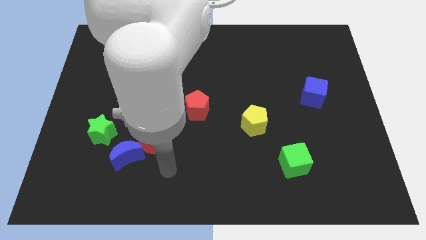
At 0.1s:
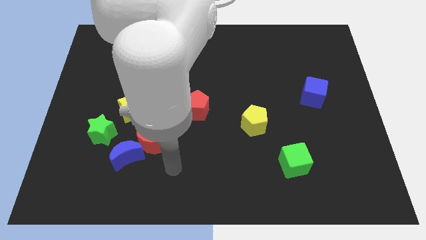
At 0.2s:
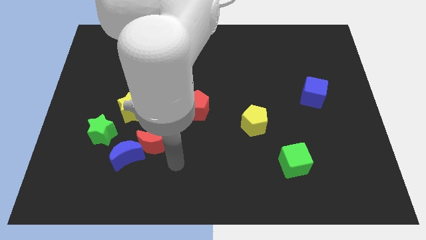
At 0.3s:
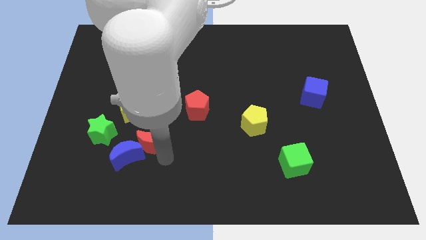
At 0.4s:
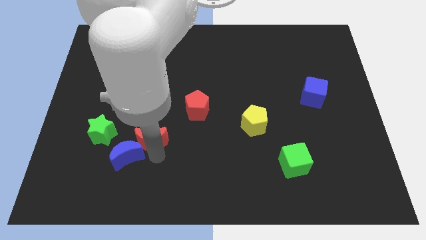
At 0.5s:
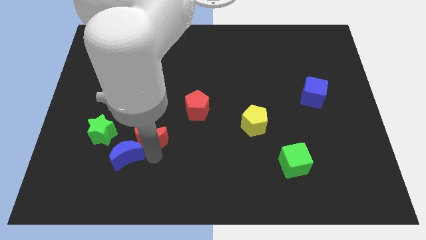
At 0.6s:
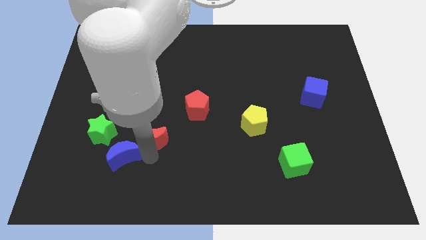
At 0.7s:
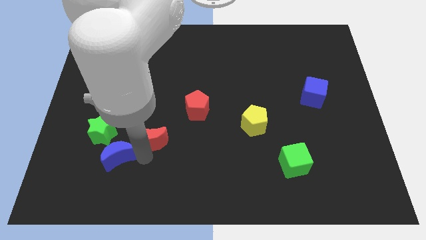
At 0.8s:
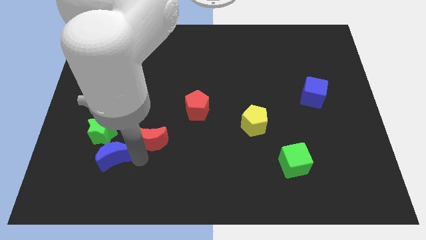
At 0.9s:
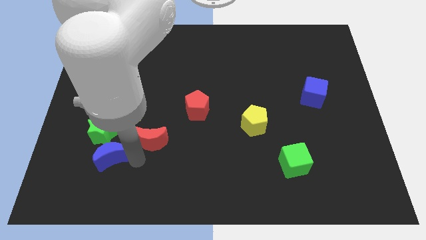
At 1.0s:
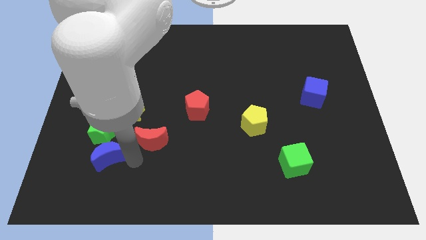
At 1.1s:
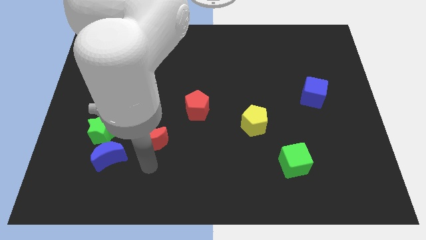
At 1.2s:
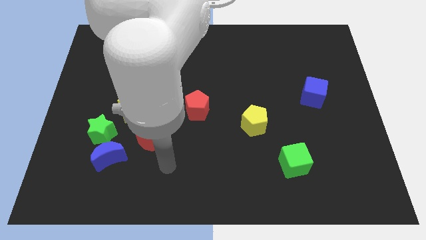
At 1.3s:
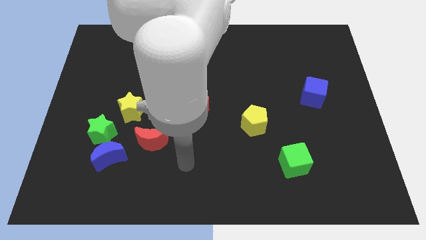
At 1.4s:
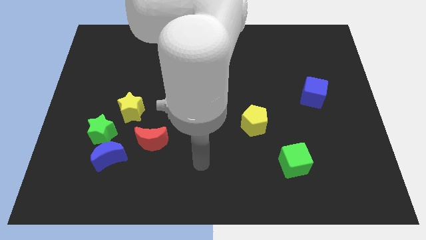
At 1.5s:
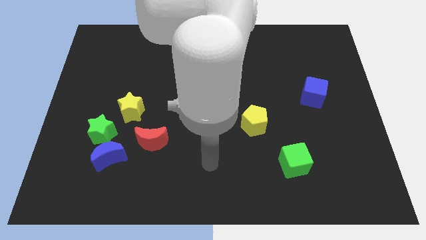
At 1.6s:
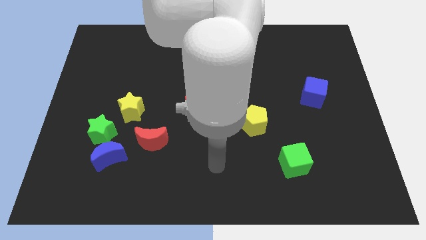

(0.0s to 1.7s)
place the blue moon below the green star

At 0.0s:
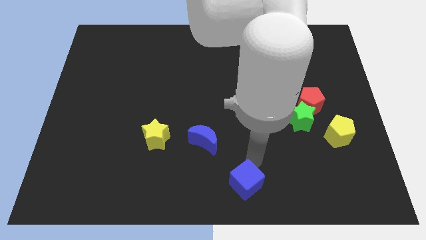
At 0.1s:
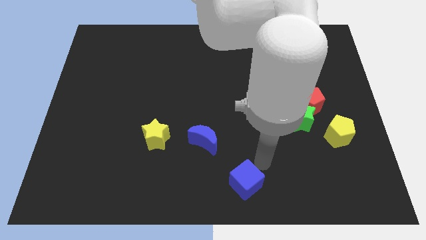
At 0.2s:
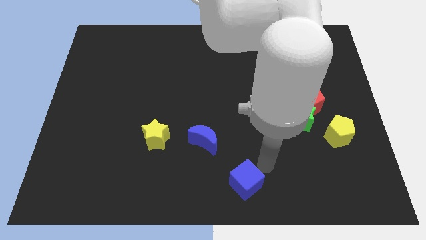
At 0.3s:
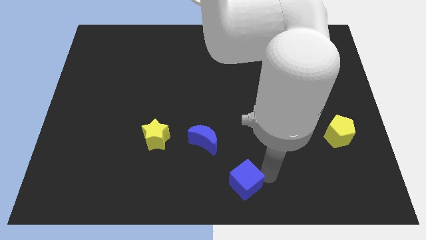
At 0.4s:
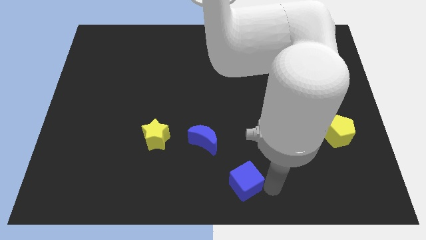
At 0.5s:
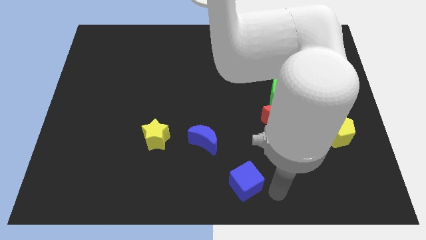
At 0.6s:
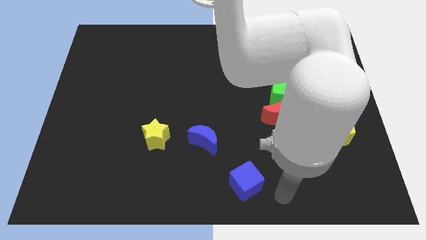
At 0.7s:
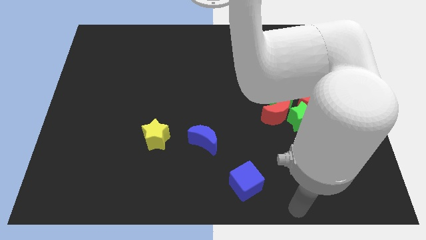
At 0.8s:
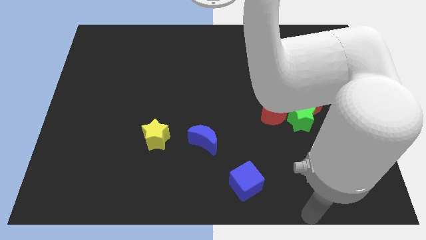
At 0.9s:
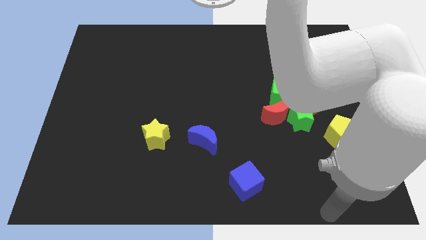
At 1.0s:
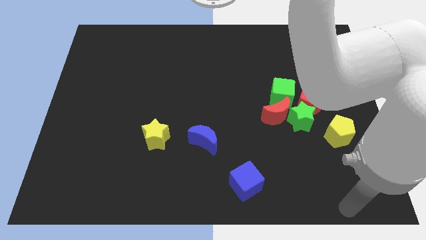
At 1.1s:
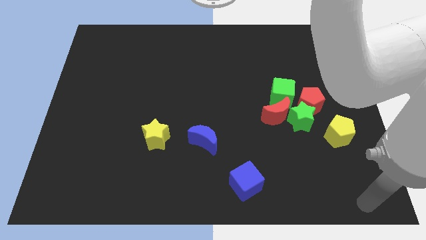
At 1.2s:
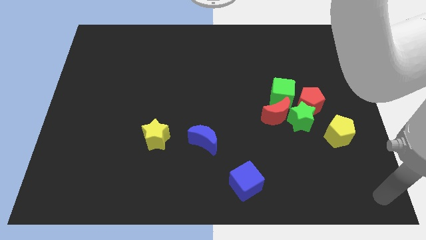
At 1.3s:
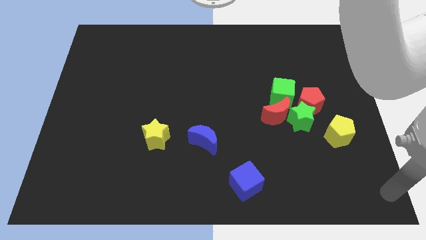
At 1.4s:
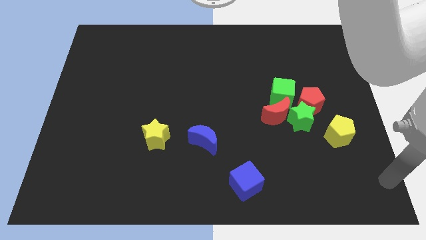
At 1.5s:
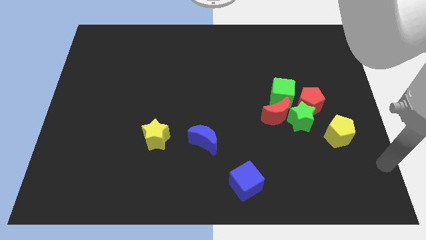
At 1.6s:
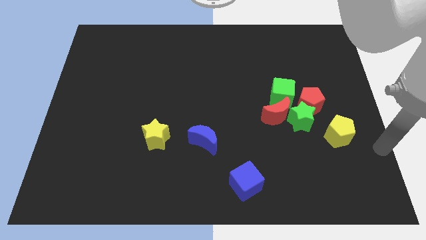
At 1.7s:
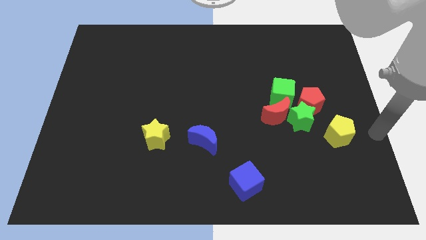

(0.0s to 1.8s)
drag your arm towards the center right

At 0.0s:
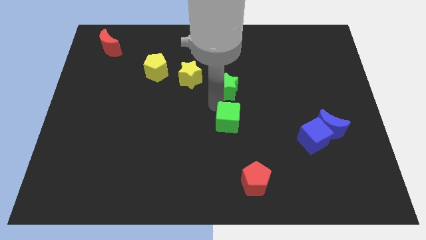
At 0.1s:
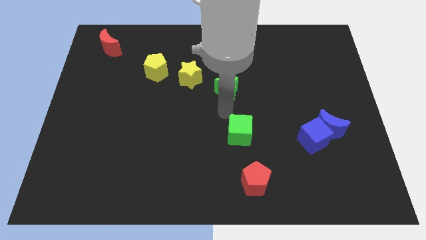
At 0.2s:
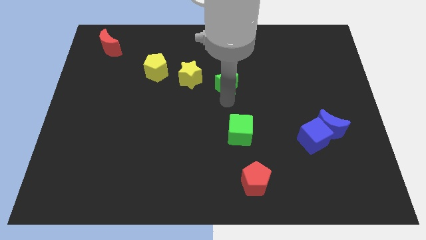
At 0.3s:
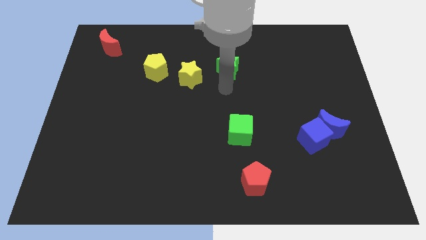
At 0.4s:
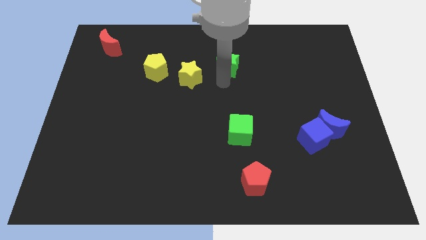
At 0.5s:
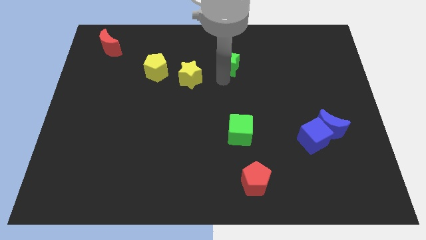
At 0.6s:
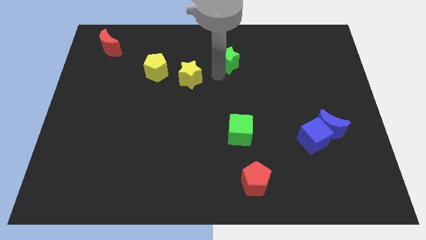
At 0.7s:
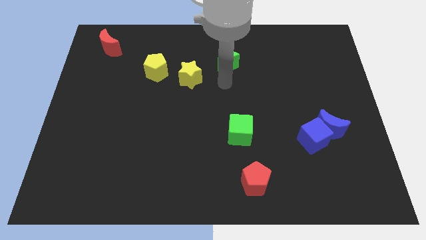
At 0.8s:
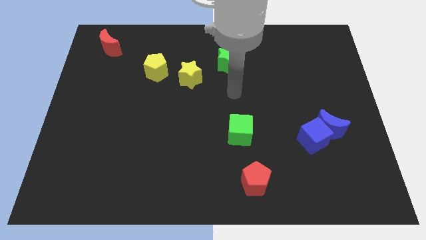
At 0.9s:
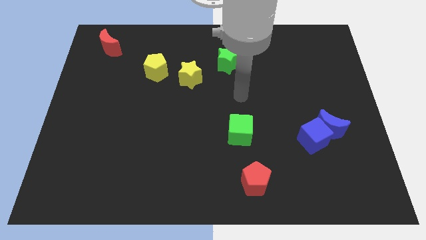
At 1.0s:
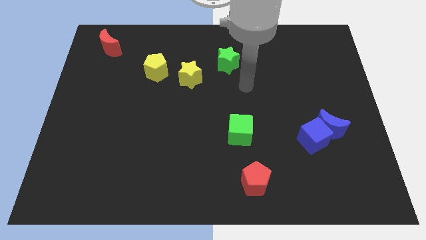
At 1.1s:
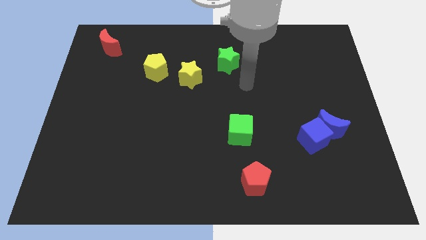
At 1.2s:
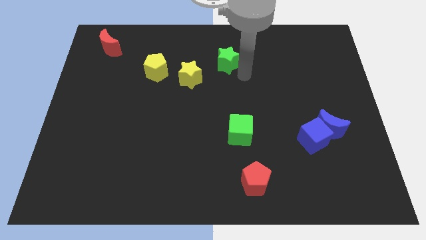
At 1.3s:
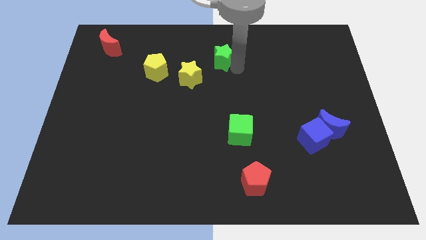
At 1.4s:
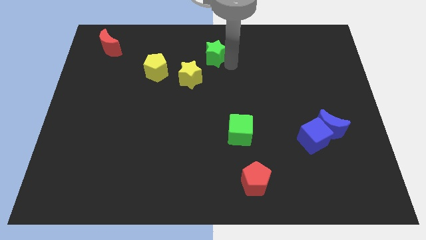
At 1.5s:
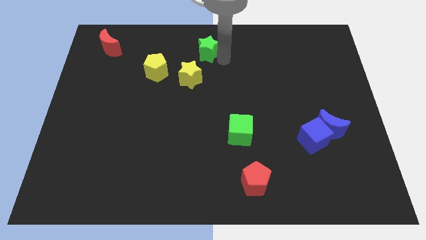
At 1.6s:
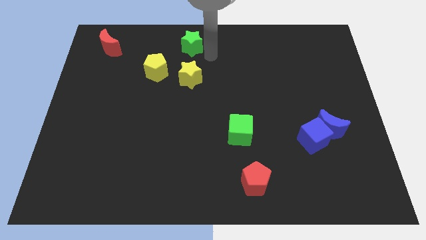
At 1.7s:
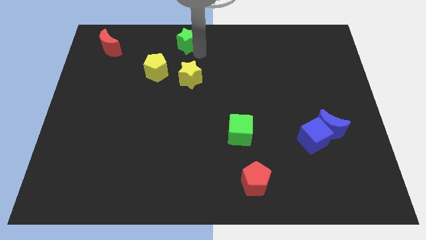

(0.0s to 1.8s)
place green star to the top of yellow star

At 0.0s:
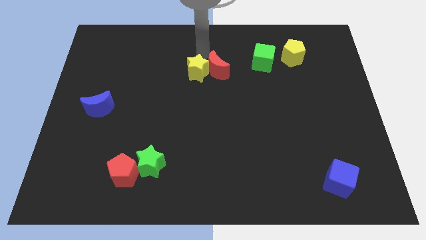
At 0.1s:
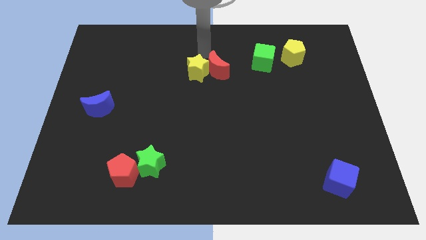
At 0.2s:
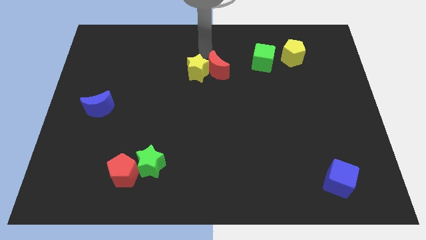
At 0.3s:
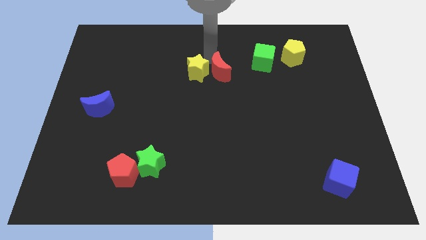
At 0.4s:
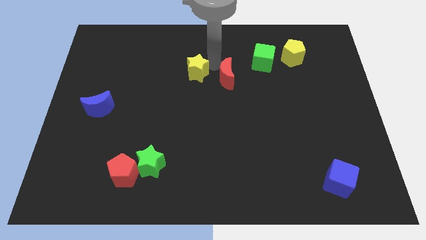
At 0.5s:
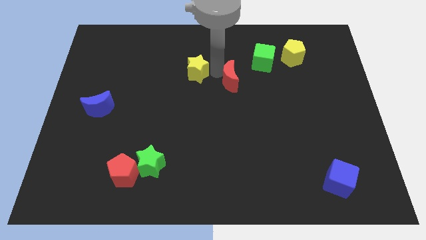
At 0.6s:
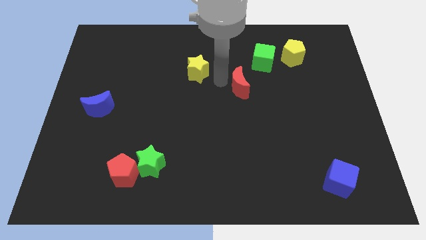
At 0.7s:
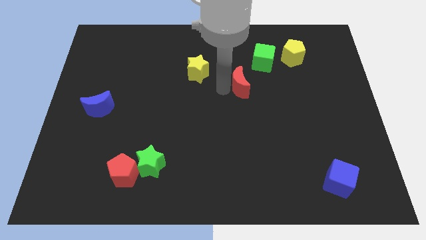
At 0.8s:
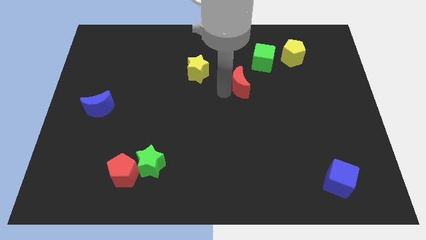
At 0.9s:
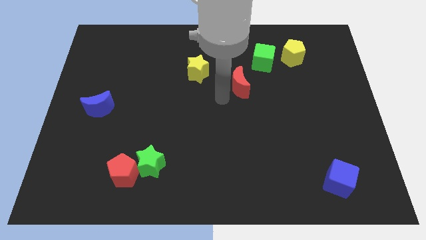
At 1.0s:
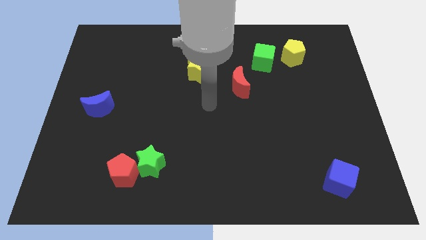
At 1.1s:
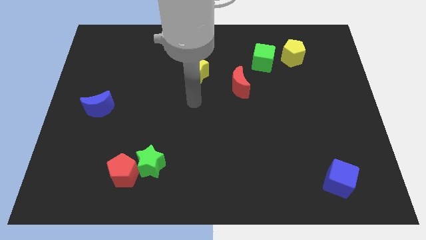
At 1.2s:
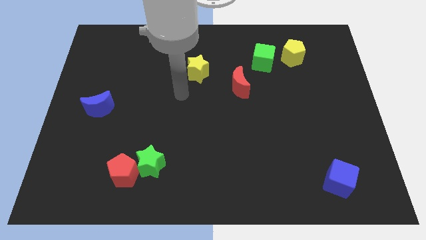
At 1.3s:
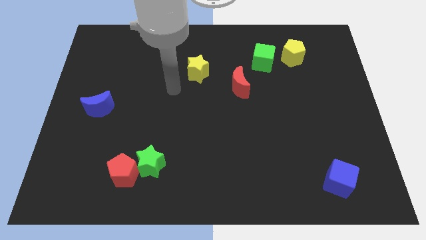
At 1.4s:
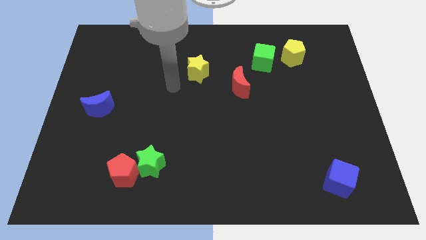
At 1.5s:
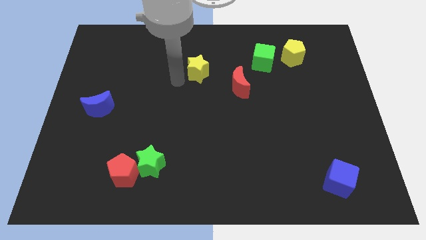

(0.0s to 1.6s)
separate the red crescent away from the yellow star

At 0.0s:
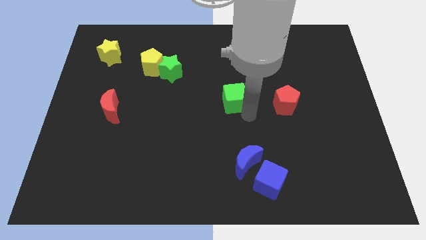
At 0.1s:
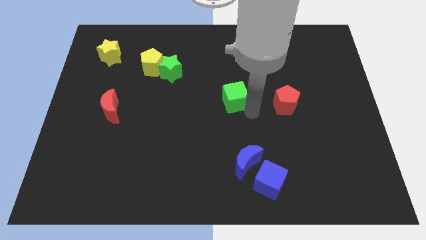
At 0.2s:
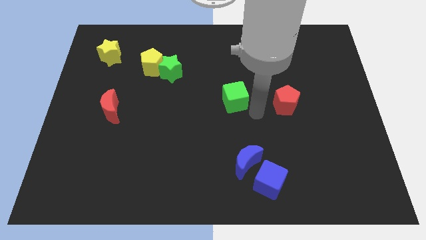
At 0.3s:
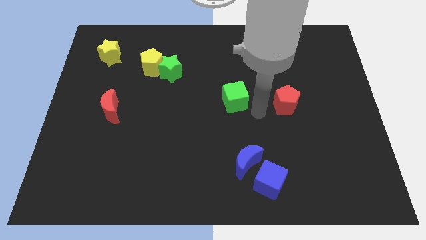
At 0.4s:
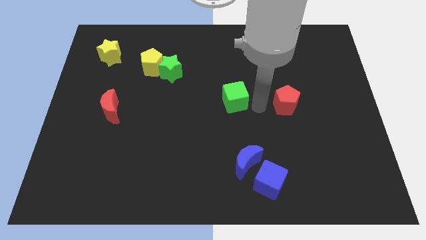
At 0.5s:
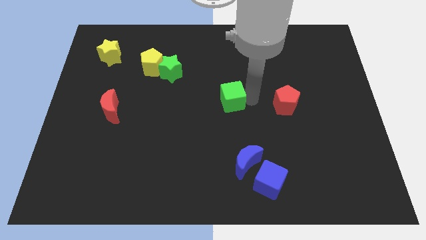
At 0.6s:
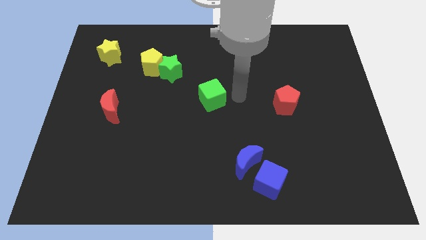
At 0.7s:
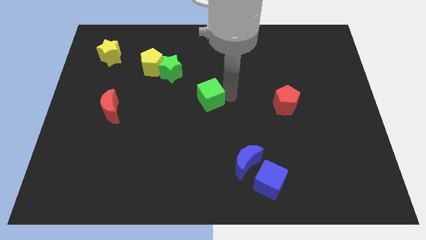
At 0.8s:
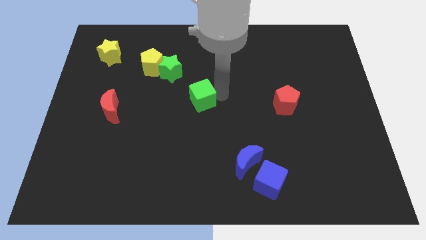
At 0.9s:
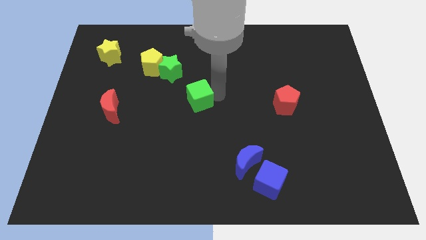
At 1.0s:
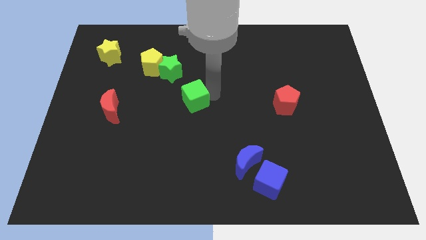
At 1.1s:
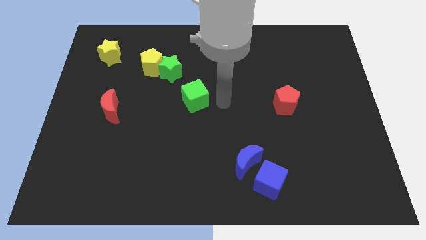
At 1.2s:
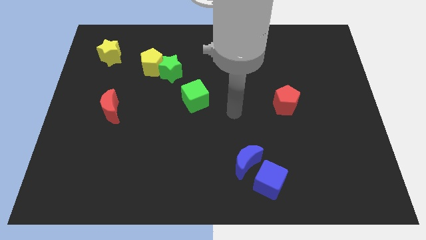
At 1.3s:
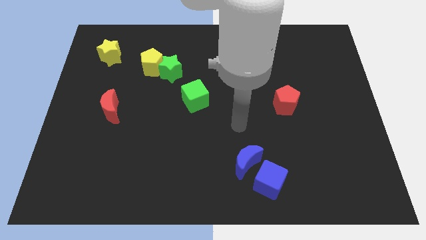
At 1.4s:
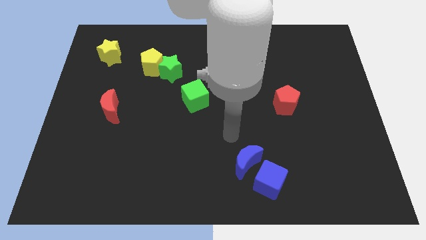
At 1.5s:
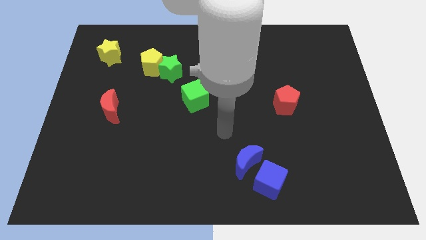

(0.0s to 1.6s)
move the green cube towards the left side of the board

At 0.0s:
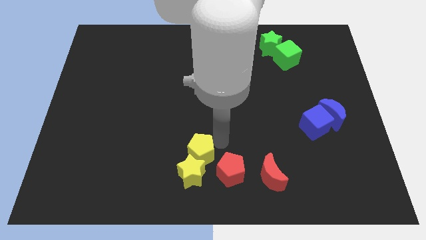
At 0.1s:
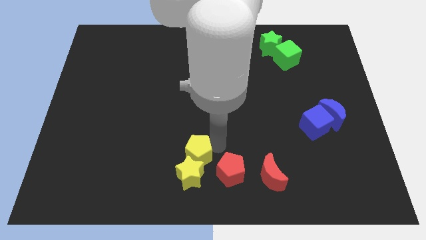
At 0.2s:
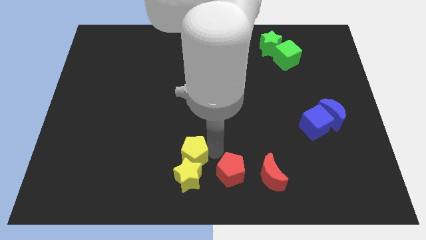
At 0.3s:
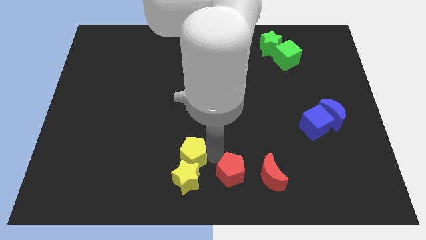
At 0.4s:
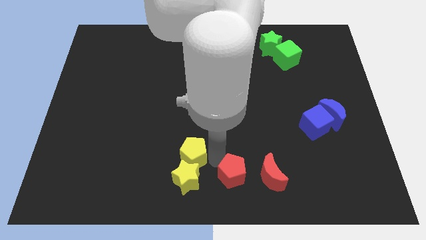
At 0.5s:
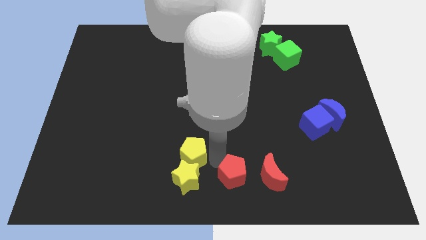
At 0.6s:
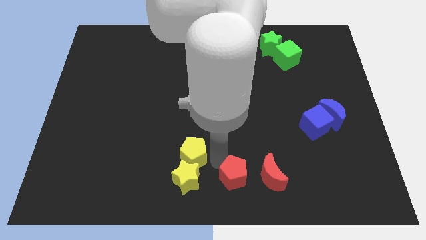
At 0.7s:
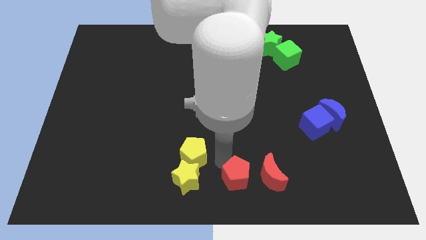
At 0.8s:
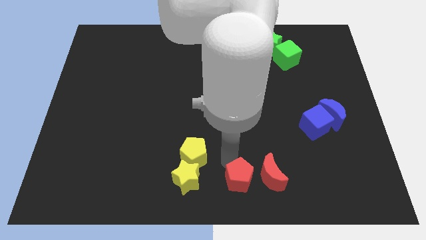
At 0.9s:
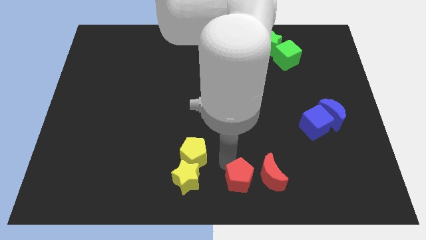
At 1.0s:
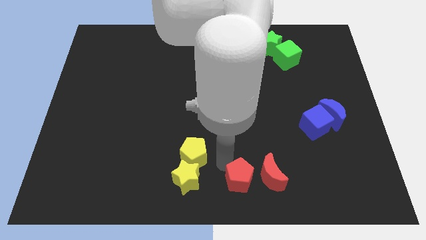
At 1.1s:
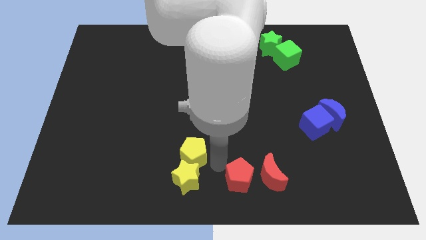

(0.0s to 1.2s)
separate yellow blocks and red pentagon
